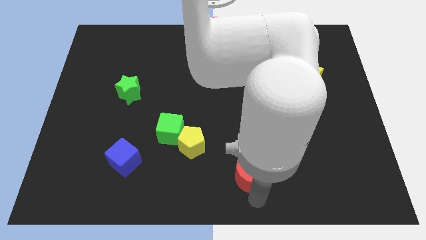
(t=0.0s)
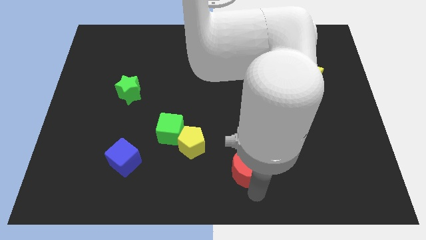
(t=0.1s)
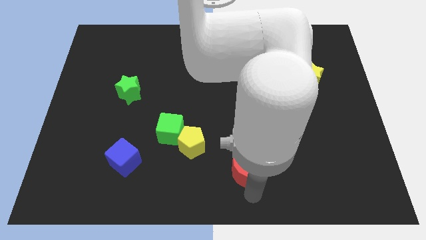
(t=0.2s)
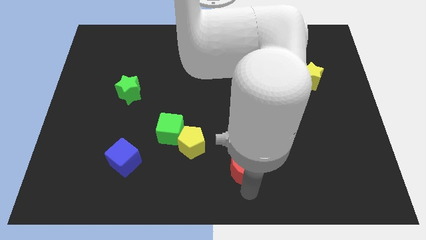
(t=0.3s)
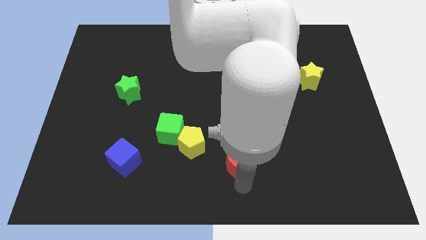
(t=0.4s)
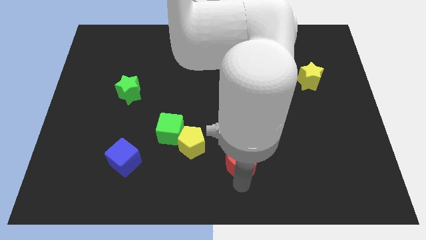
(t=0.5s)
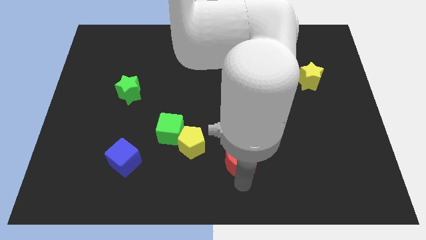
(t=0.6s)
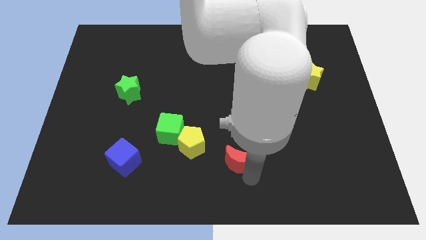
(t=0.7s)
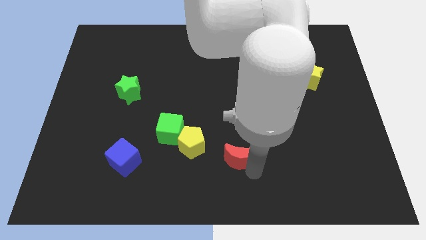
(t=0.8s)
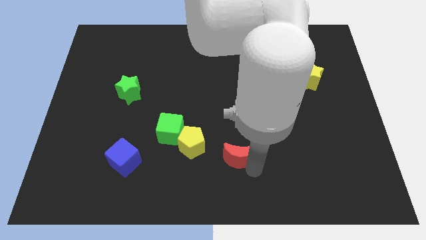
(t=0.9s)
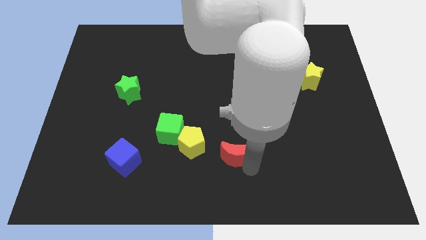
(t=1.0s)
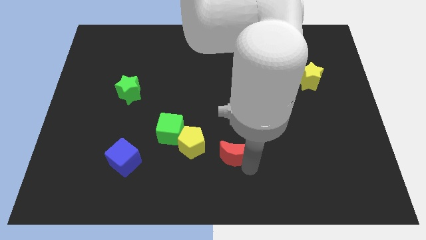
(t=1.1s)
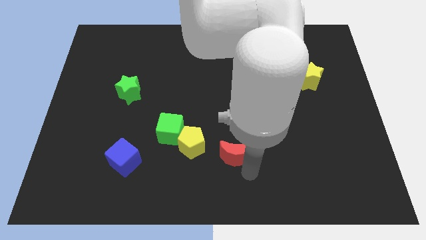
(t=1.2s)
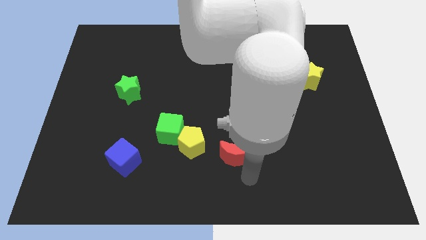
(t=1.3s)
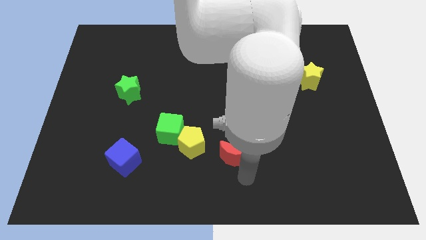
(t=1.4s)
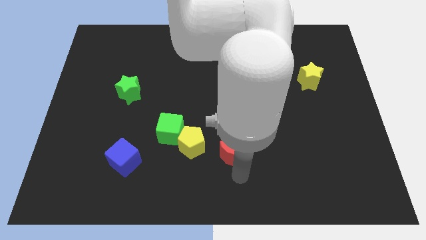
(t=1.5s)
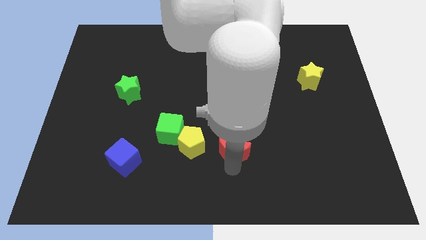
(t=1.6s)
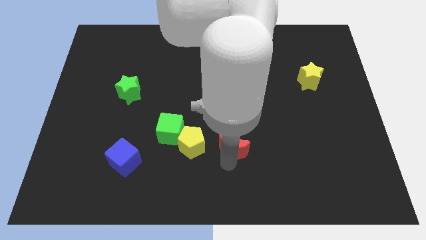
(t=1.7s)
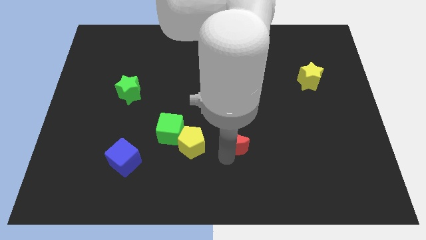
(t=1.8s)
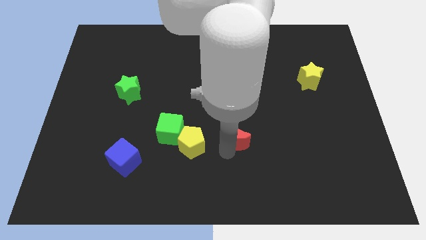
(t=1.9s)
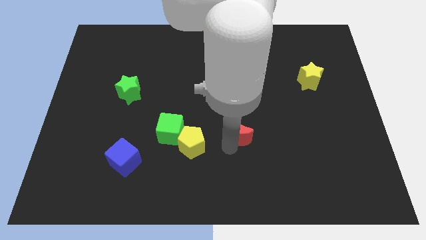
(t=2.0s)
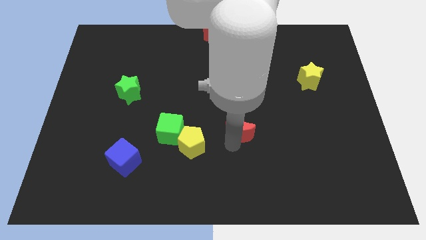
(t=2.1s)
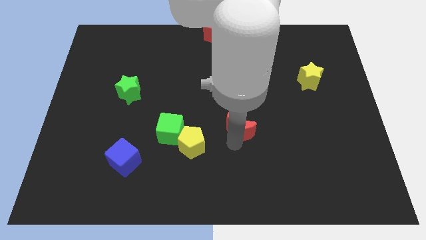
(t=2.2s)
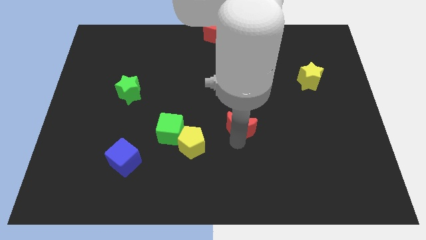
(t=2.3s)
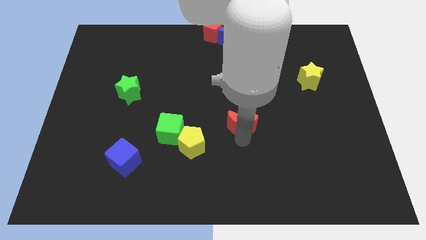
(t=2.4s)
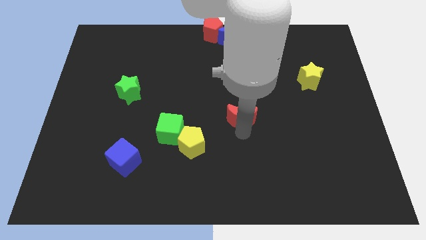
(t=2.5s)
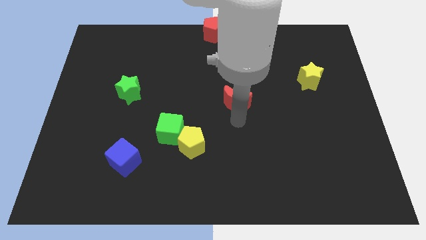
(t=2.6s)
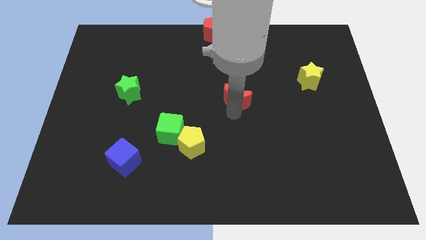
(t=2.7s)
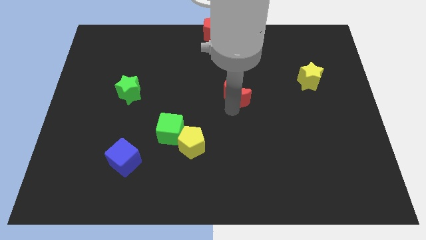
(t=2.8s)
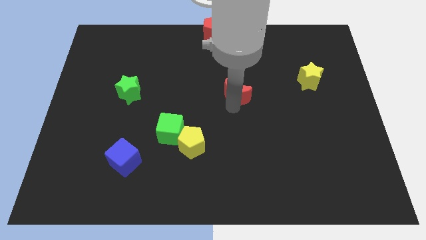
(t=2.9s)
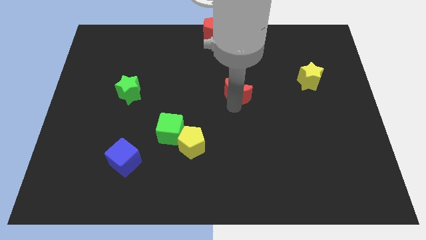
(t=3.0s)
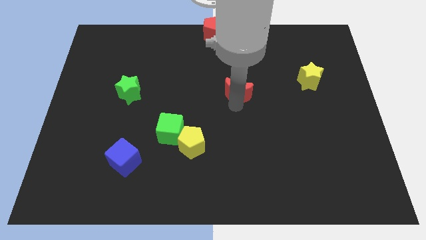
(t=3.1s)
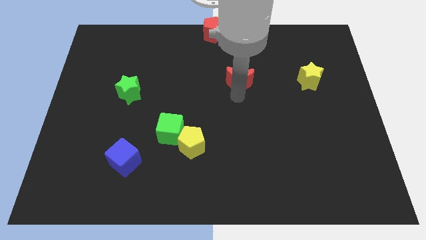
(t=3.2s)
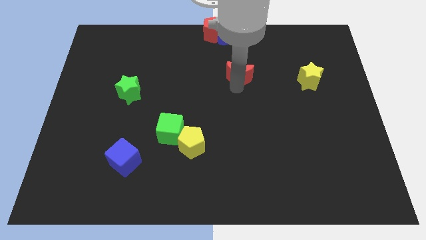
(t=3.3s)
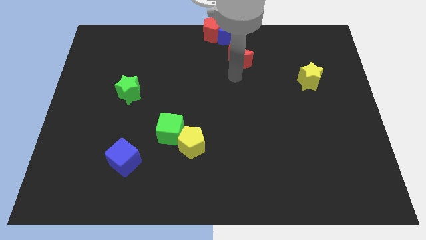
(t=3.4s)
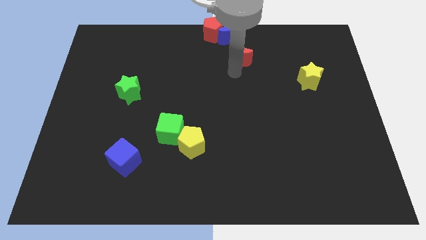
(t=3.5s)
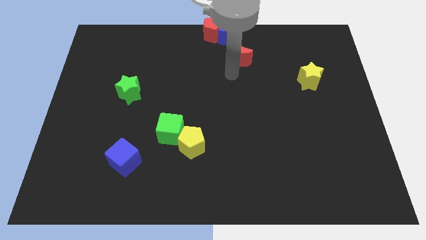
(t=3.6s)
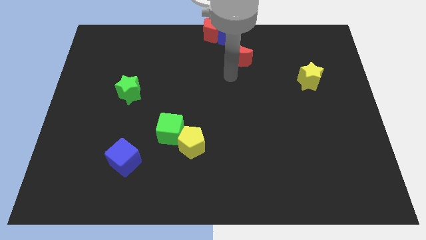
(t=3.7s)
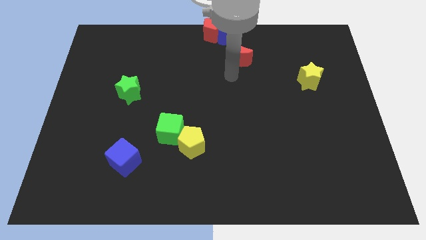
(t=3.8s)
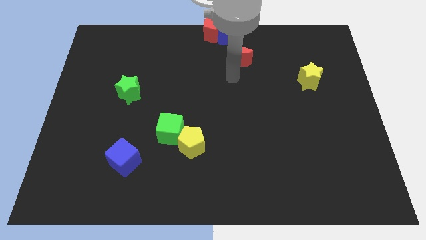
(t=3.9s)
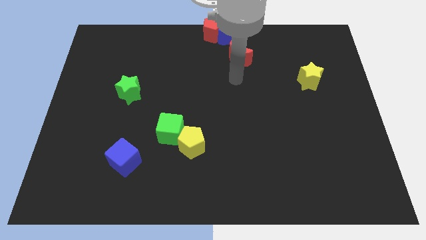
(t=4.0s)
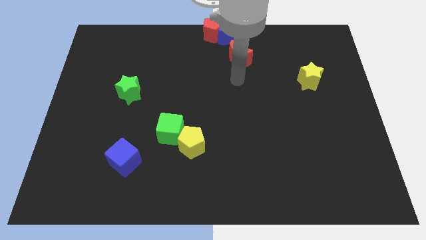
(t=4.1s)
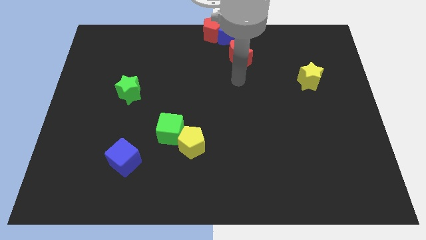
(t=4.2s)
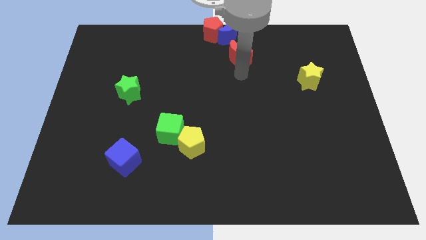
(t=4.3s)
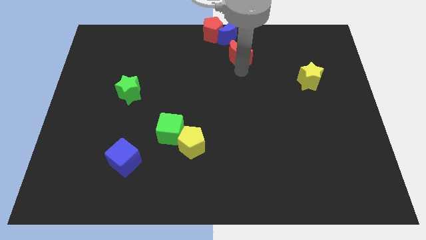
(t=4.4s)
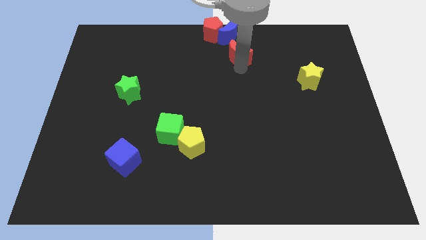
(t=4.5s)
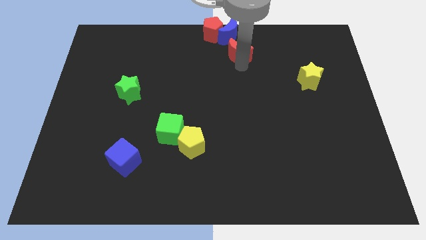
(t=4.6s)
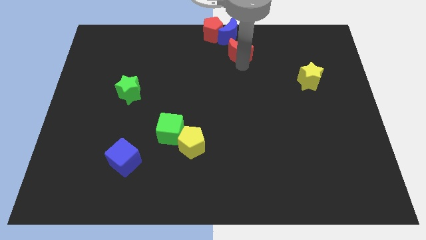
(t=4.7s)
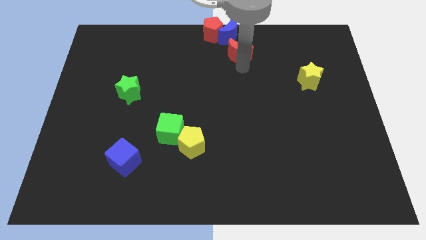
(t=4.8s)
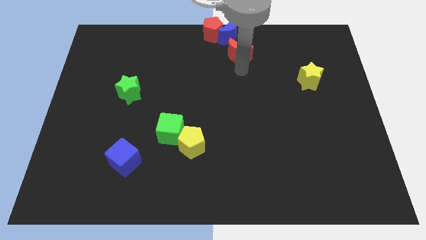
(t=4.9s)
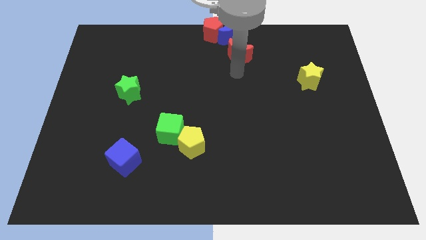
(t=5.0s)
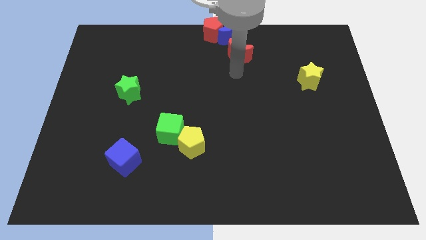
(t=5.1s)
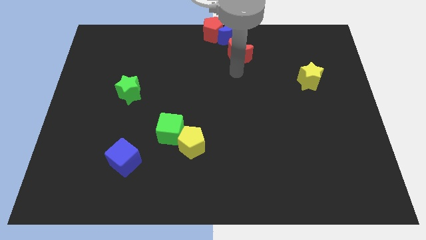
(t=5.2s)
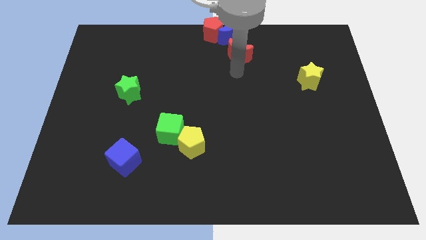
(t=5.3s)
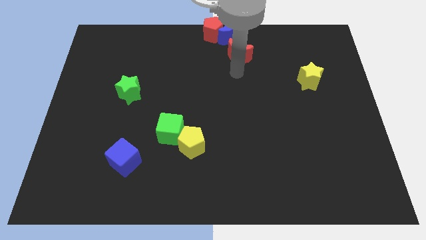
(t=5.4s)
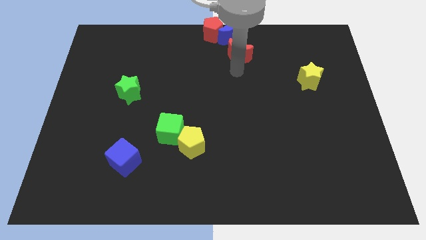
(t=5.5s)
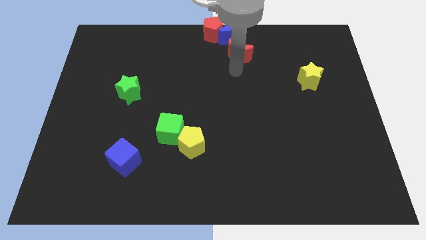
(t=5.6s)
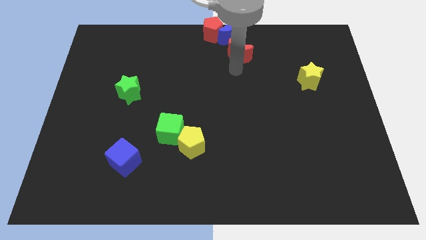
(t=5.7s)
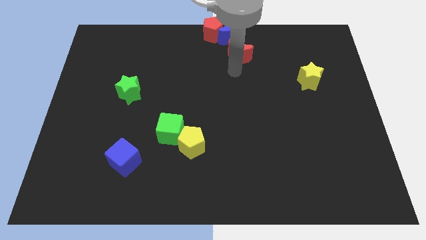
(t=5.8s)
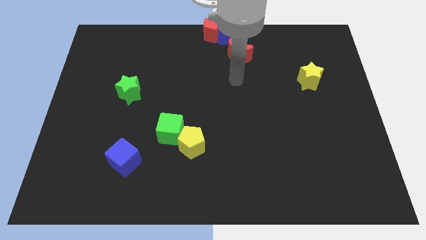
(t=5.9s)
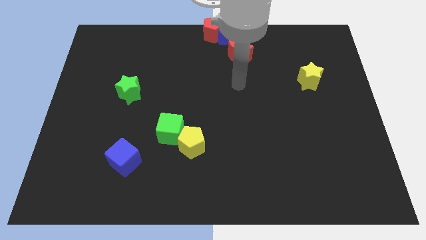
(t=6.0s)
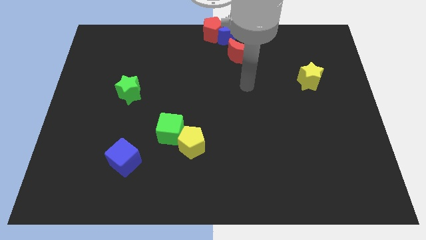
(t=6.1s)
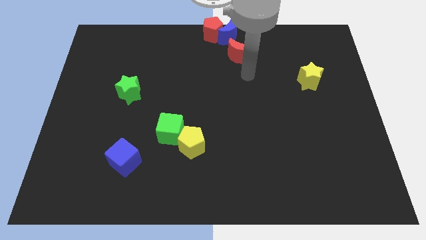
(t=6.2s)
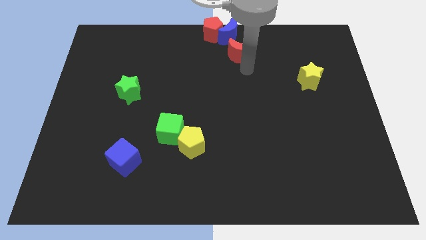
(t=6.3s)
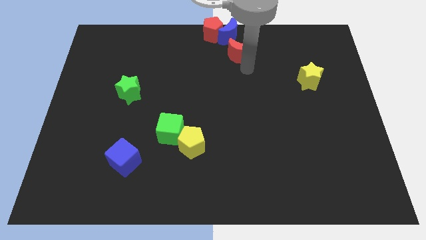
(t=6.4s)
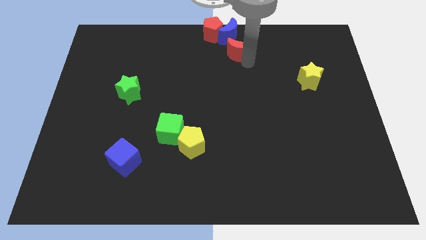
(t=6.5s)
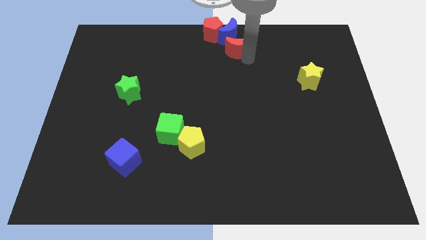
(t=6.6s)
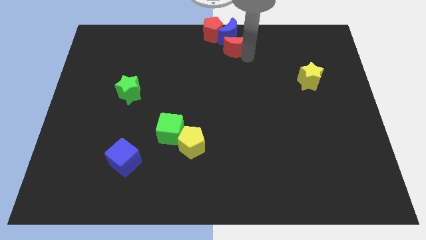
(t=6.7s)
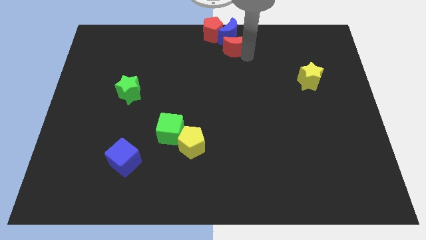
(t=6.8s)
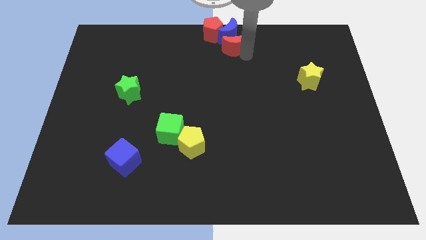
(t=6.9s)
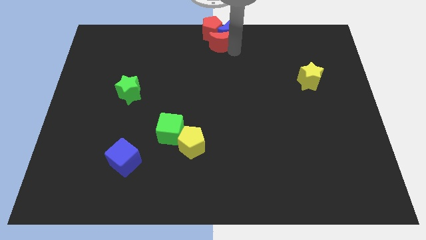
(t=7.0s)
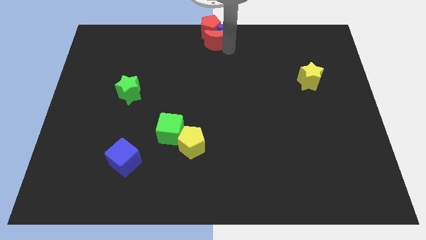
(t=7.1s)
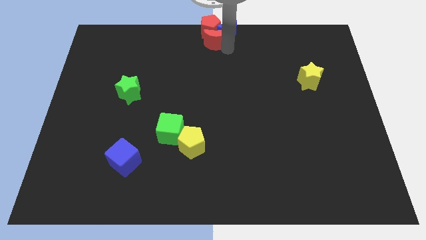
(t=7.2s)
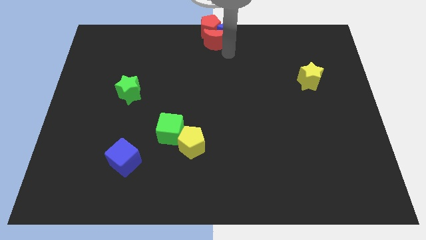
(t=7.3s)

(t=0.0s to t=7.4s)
push the red crescent into the red pentagon and the blue crescent

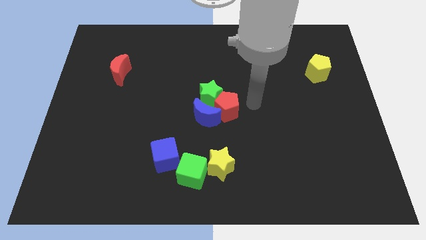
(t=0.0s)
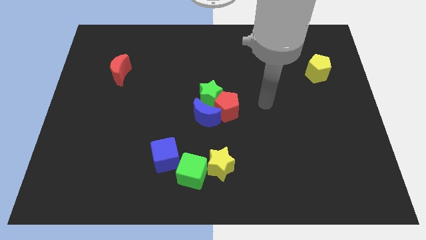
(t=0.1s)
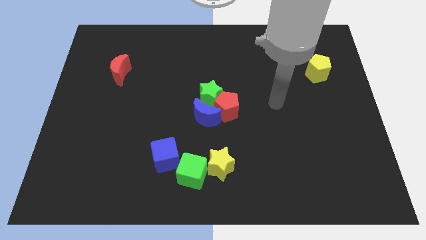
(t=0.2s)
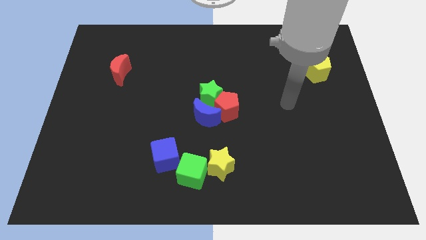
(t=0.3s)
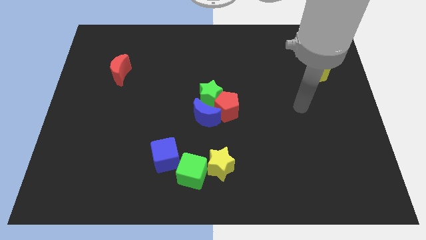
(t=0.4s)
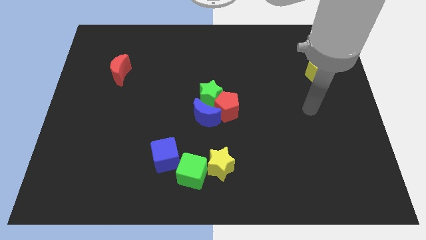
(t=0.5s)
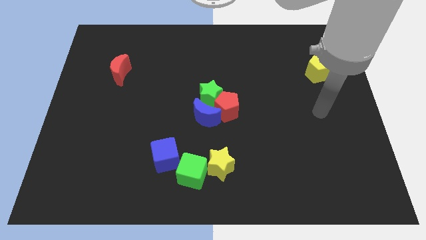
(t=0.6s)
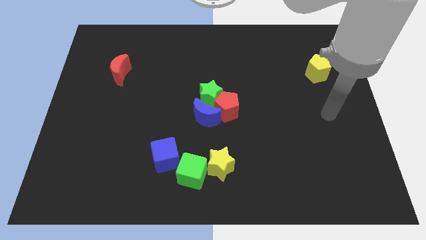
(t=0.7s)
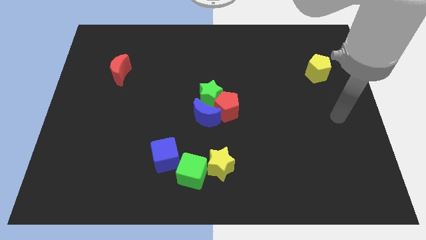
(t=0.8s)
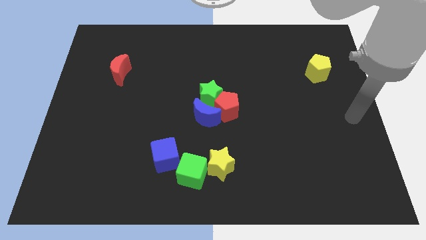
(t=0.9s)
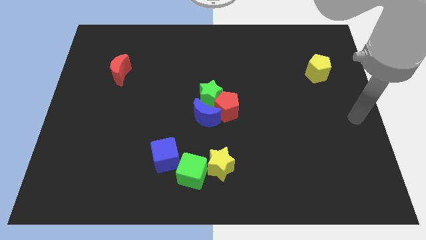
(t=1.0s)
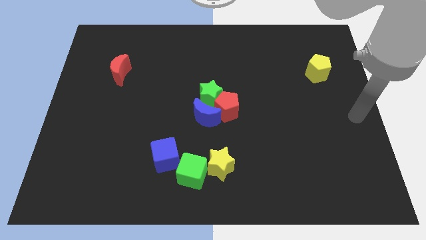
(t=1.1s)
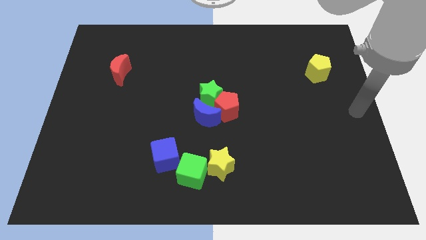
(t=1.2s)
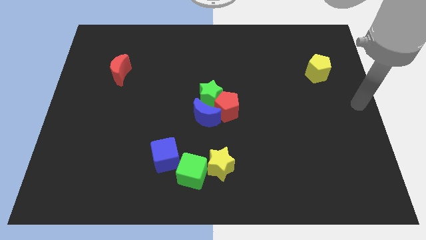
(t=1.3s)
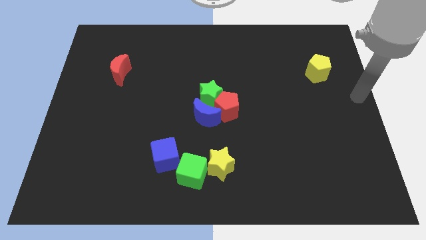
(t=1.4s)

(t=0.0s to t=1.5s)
move your arm away from the red pentagon
